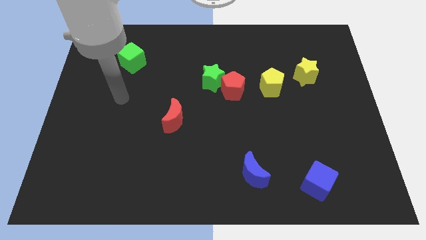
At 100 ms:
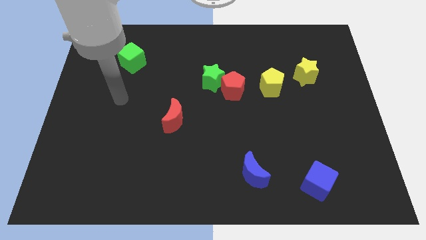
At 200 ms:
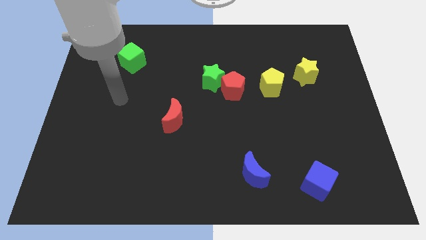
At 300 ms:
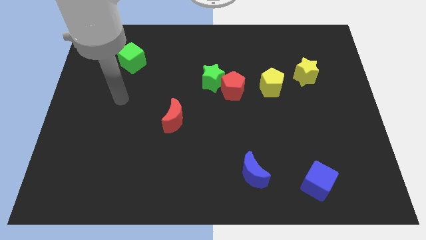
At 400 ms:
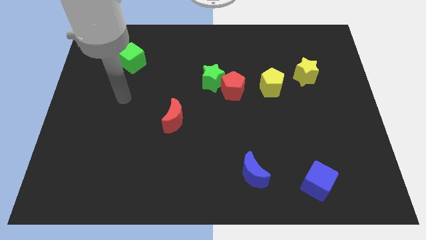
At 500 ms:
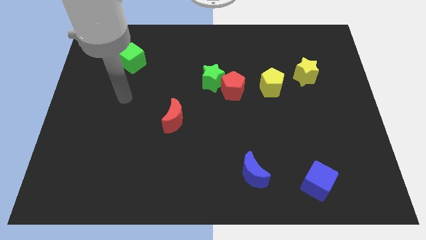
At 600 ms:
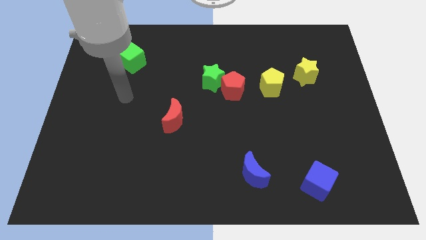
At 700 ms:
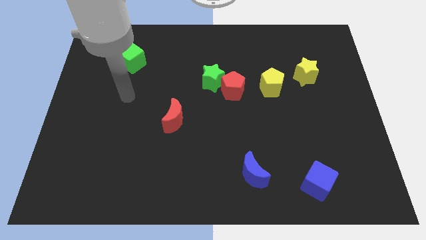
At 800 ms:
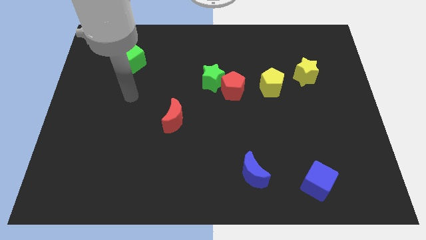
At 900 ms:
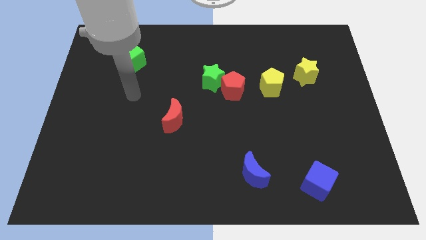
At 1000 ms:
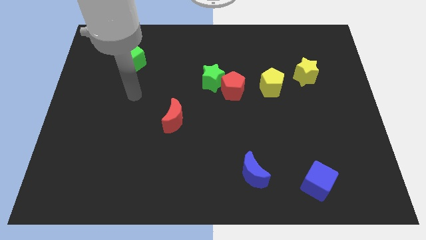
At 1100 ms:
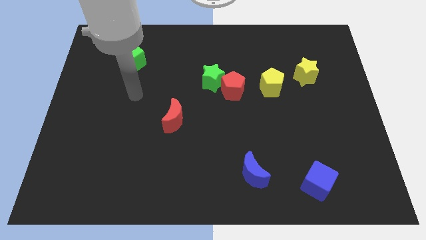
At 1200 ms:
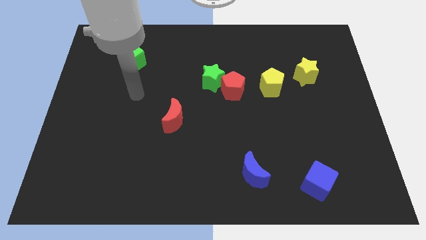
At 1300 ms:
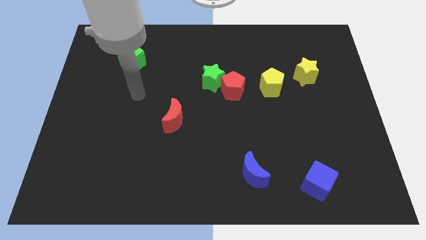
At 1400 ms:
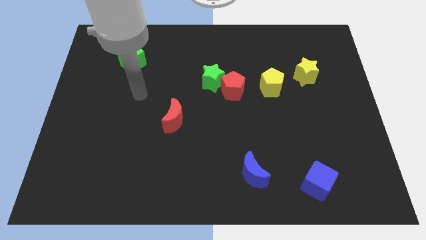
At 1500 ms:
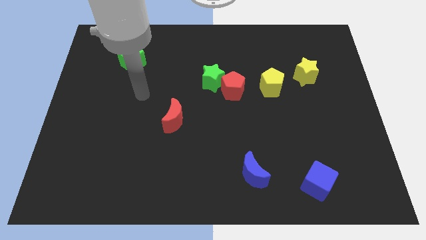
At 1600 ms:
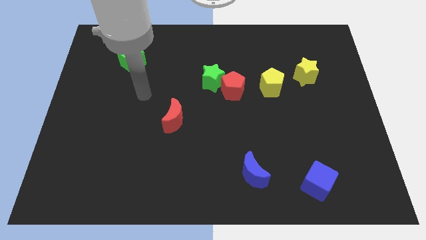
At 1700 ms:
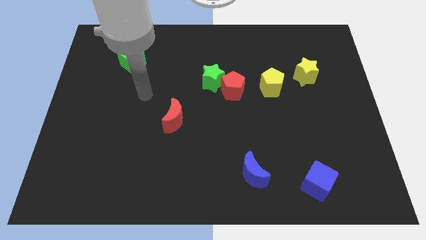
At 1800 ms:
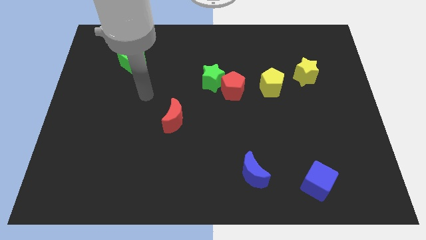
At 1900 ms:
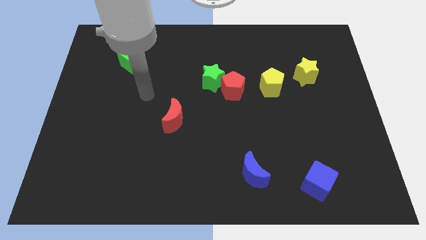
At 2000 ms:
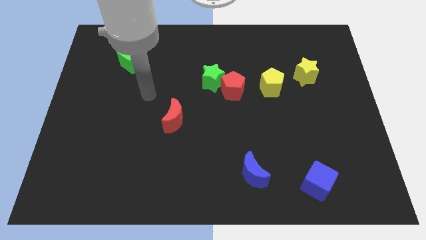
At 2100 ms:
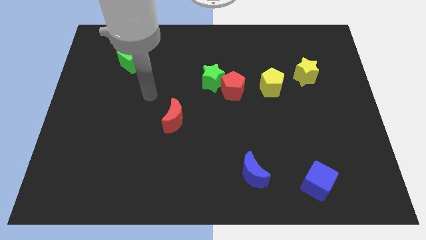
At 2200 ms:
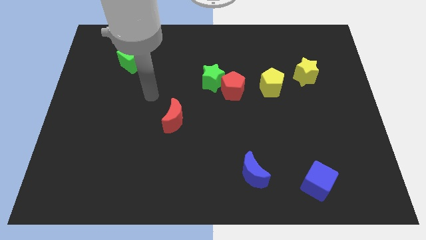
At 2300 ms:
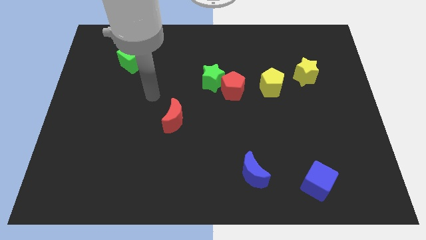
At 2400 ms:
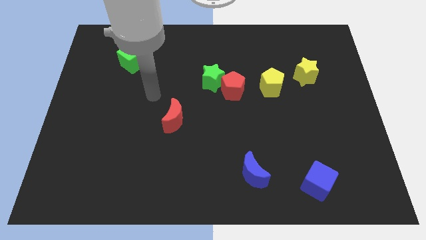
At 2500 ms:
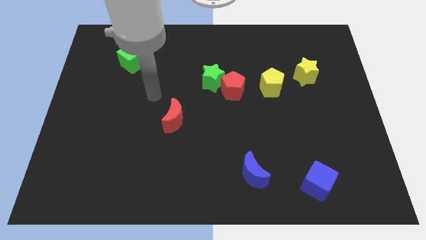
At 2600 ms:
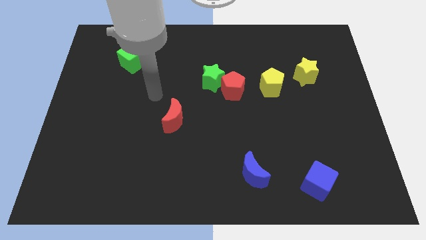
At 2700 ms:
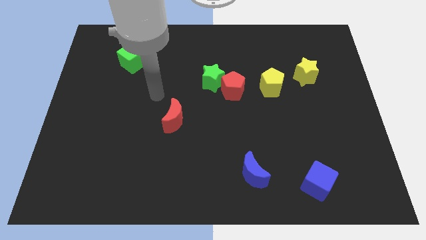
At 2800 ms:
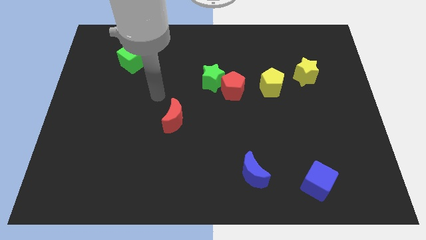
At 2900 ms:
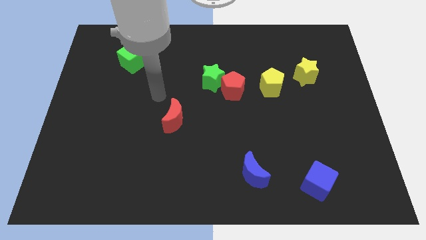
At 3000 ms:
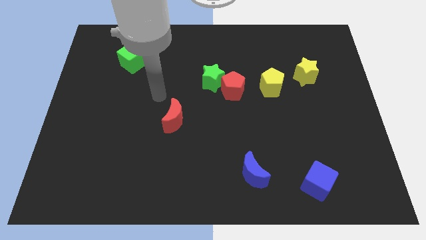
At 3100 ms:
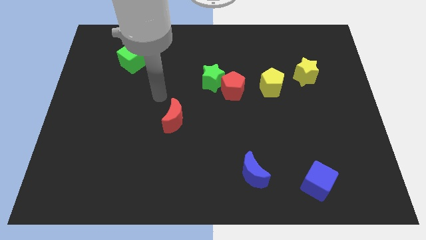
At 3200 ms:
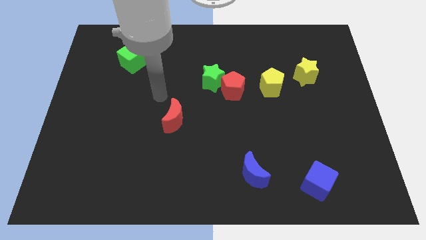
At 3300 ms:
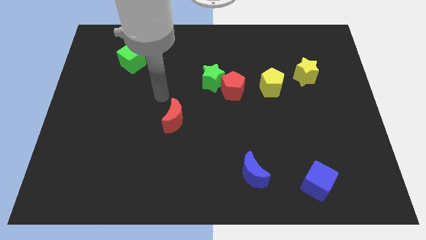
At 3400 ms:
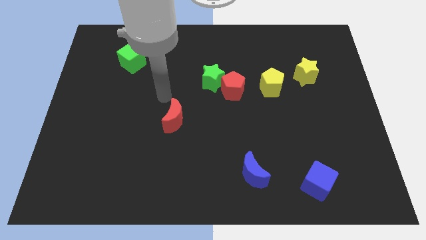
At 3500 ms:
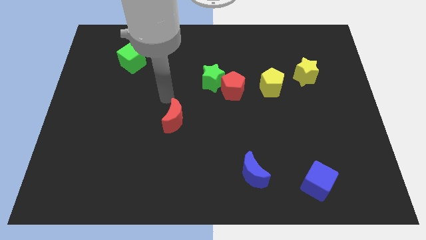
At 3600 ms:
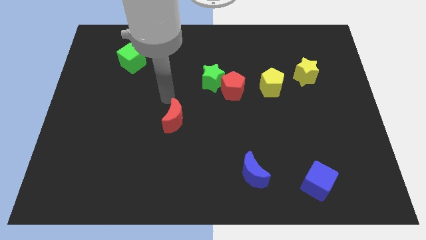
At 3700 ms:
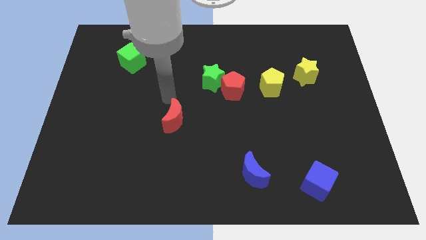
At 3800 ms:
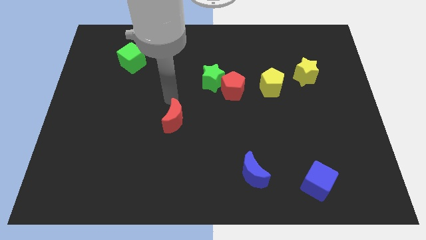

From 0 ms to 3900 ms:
move your arm towards the red crescent

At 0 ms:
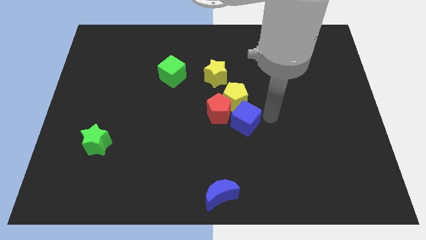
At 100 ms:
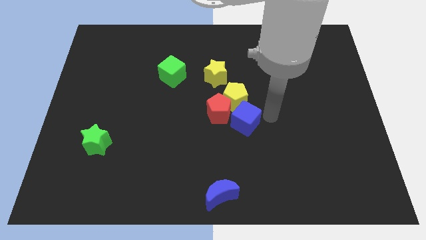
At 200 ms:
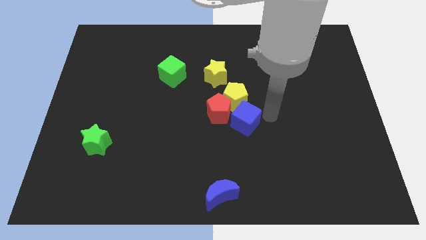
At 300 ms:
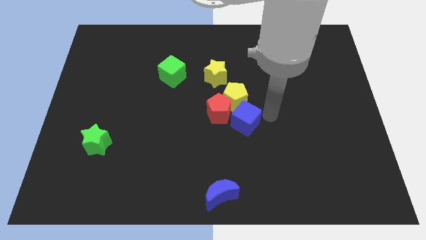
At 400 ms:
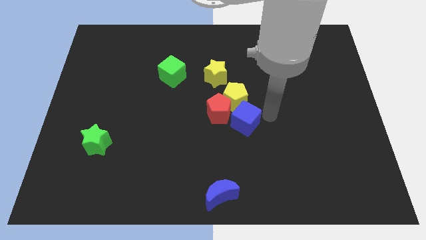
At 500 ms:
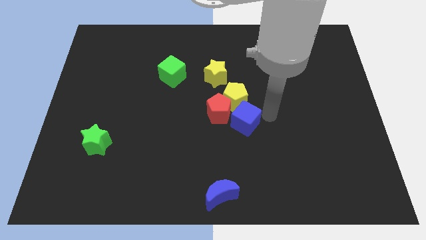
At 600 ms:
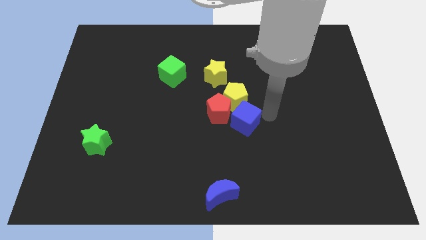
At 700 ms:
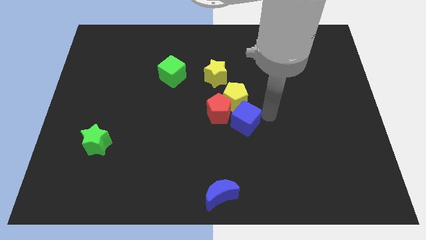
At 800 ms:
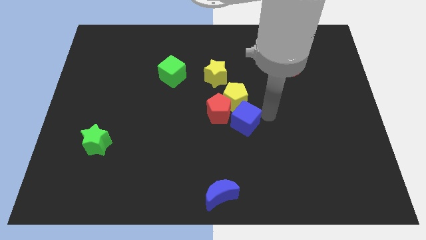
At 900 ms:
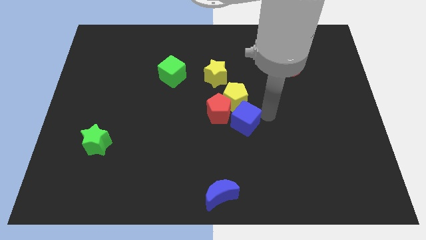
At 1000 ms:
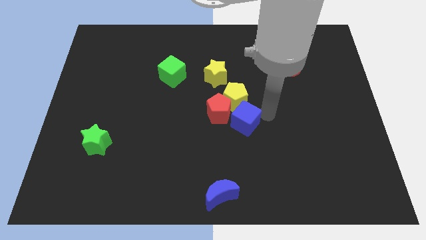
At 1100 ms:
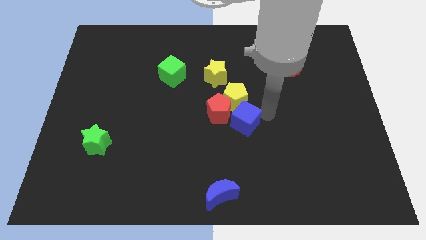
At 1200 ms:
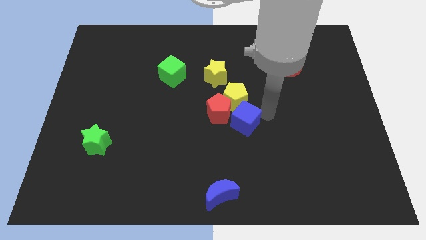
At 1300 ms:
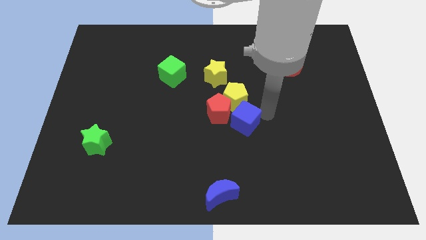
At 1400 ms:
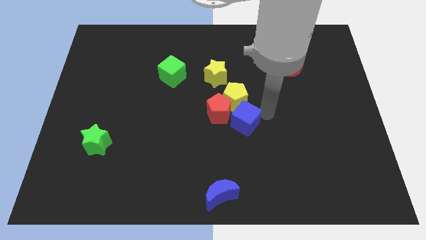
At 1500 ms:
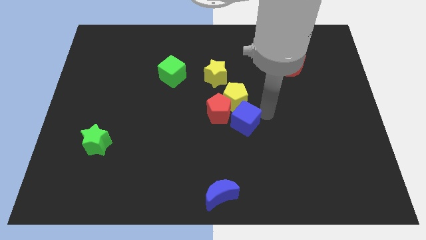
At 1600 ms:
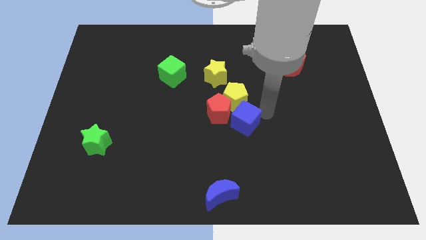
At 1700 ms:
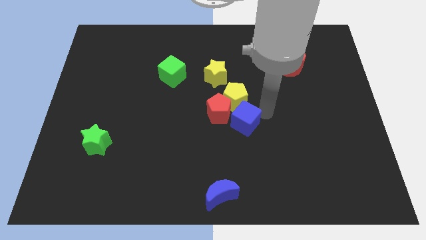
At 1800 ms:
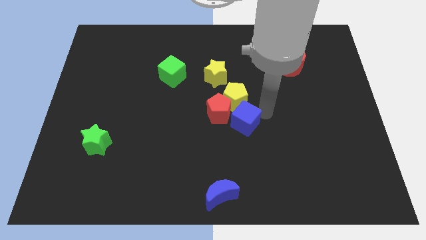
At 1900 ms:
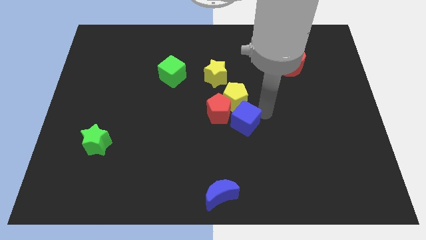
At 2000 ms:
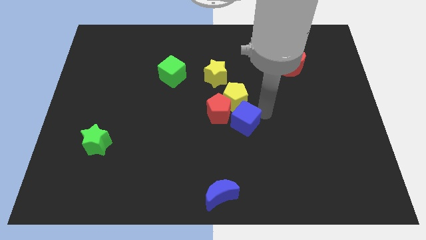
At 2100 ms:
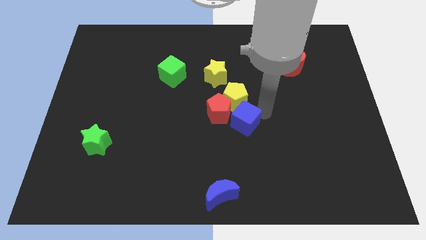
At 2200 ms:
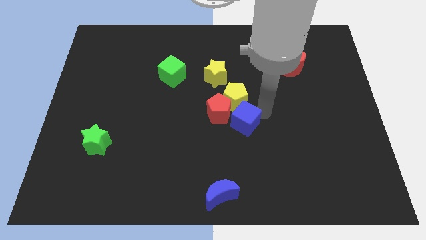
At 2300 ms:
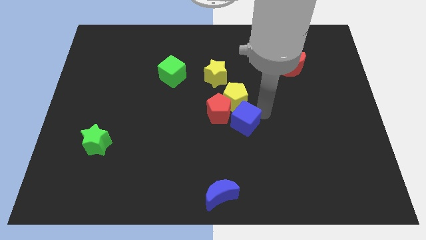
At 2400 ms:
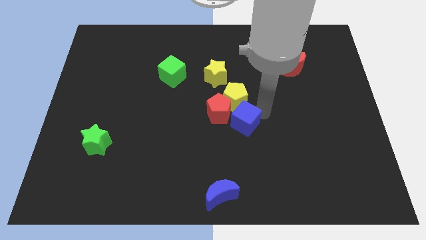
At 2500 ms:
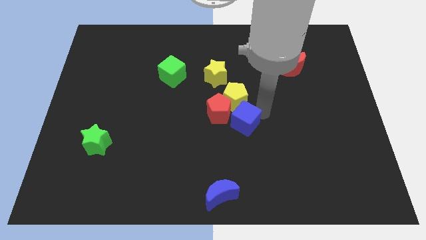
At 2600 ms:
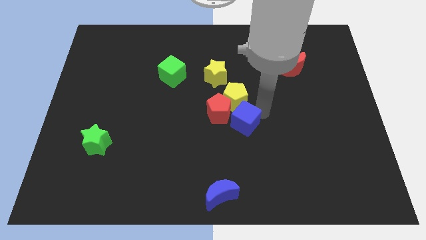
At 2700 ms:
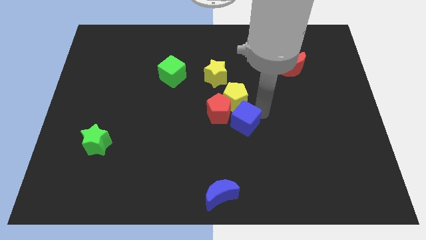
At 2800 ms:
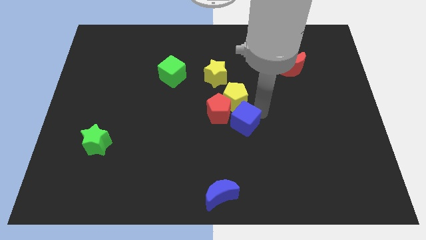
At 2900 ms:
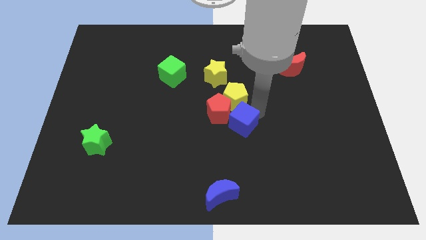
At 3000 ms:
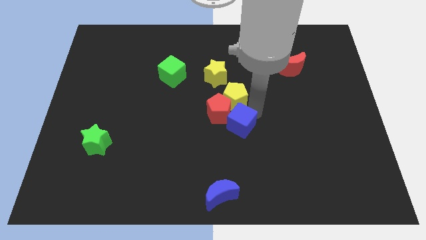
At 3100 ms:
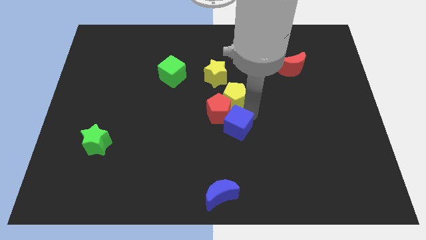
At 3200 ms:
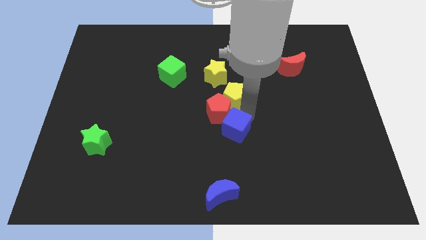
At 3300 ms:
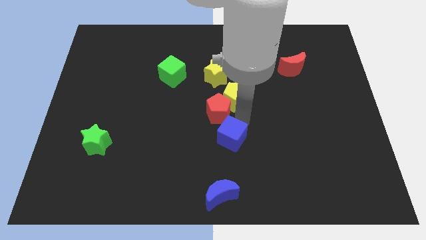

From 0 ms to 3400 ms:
slightly move the blue cube to bottom right of red pentagon

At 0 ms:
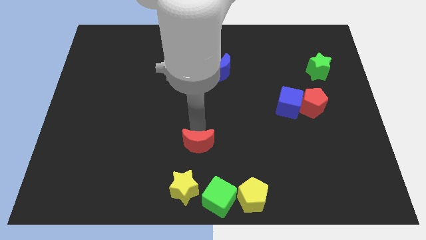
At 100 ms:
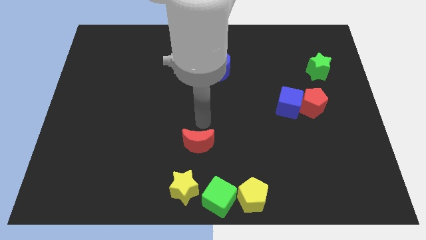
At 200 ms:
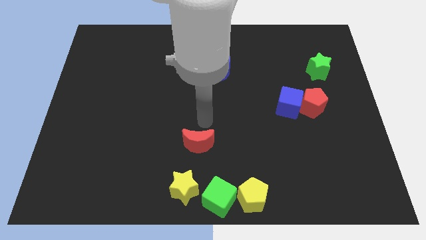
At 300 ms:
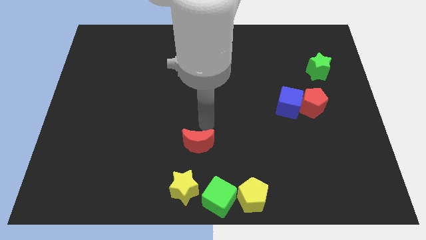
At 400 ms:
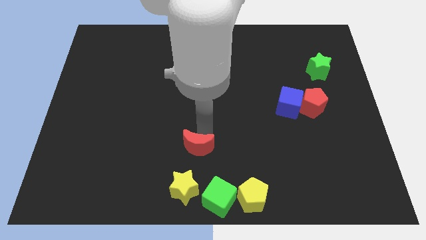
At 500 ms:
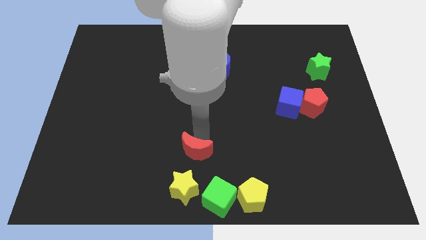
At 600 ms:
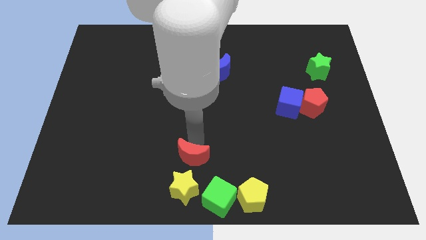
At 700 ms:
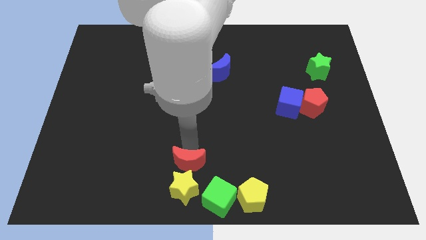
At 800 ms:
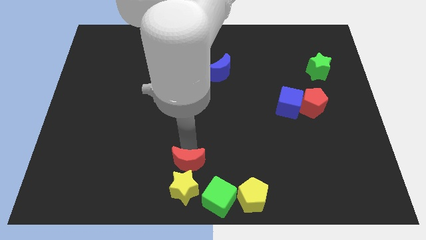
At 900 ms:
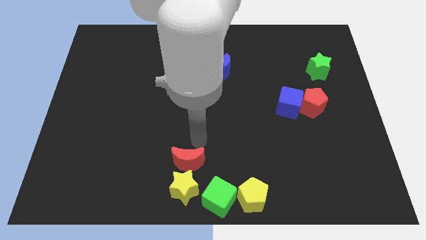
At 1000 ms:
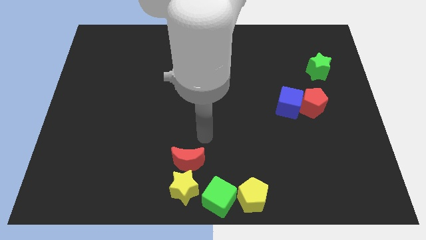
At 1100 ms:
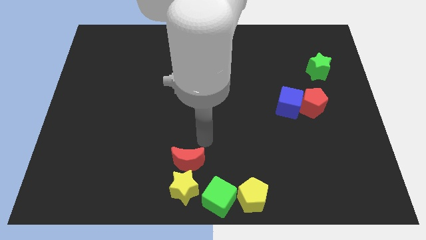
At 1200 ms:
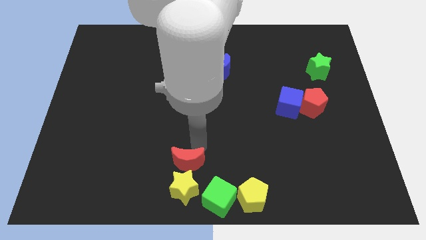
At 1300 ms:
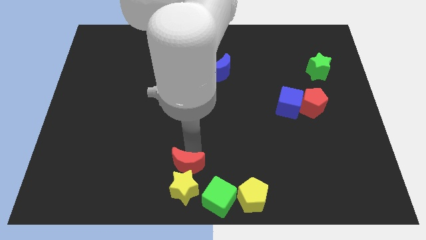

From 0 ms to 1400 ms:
move red moon above yellow star

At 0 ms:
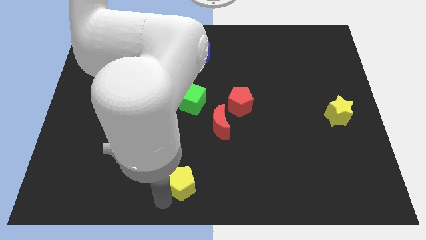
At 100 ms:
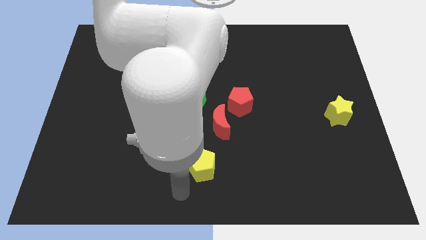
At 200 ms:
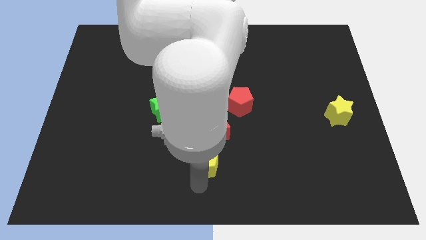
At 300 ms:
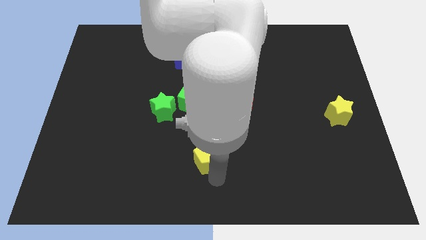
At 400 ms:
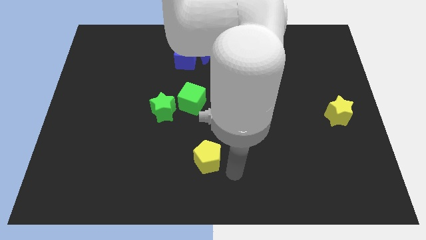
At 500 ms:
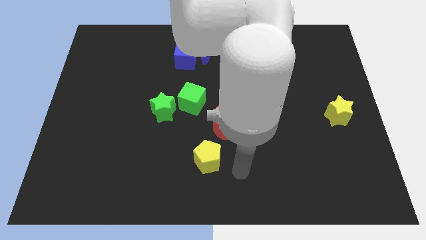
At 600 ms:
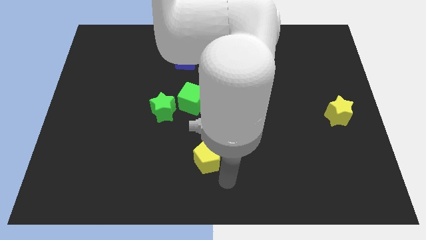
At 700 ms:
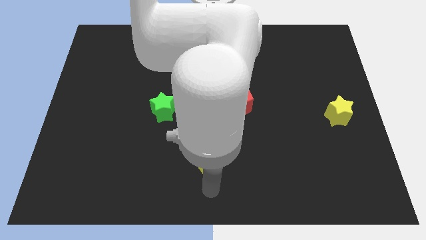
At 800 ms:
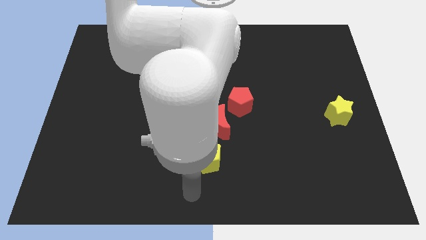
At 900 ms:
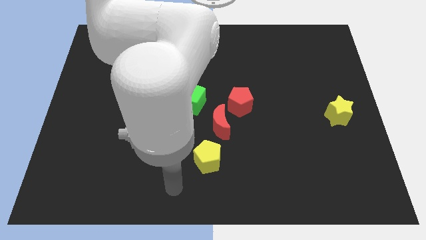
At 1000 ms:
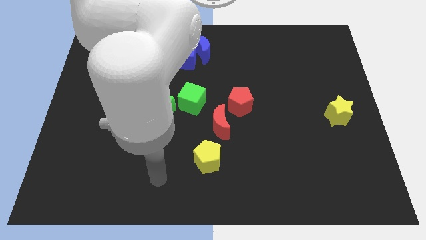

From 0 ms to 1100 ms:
move yellow pentagon towards red moon
